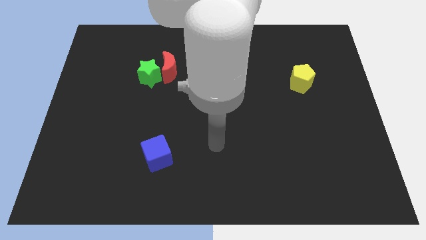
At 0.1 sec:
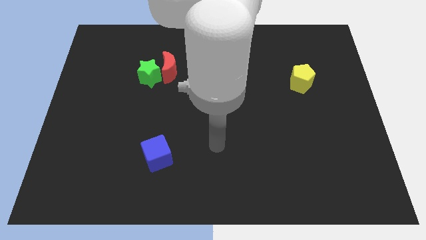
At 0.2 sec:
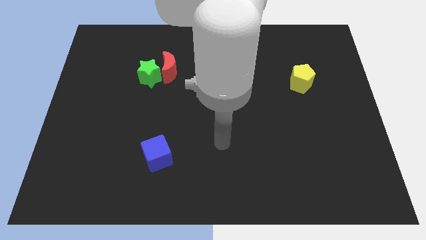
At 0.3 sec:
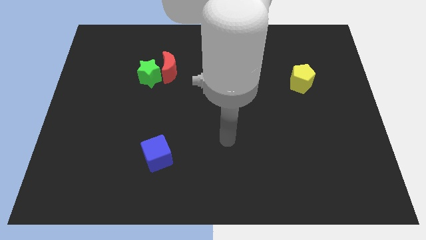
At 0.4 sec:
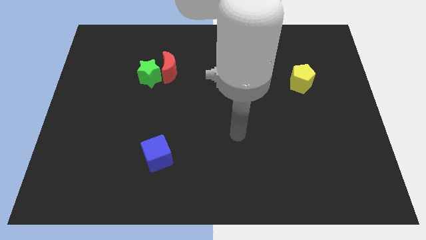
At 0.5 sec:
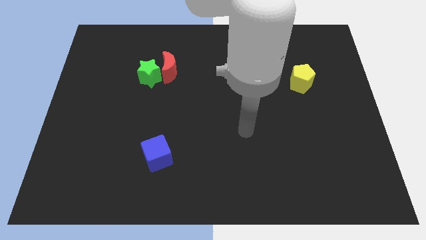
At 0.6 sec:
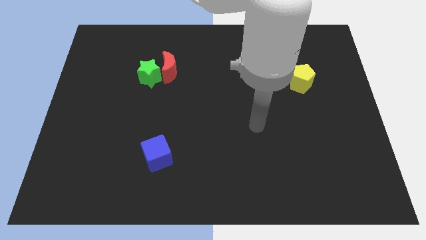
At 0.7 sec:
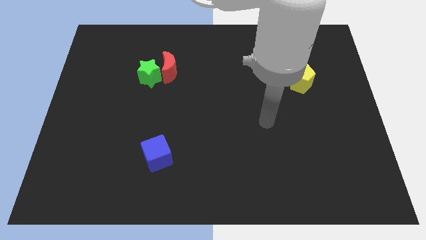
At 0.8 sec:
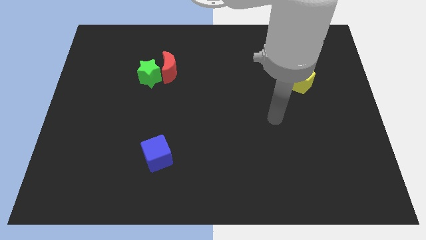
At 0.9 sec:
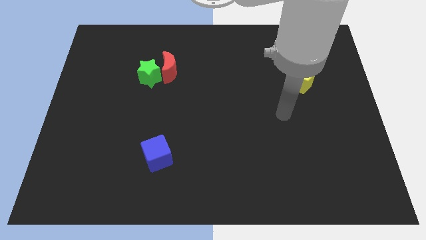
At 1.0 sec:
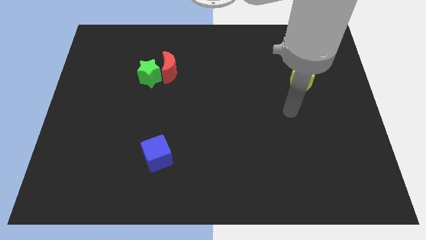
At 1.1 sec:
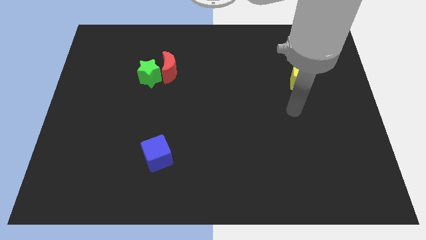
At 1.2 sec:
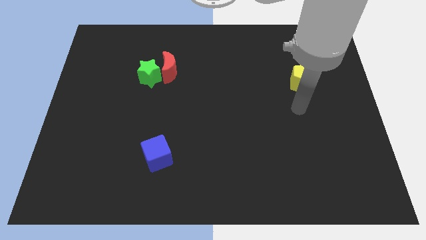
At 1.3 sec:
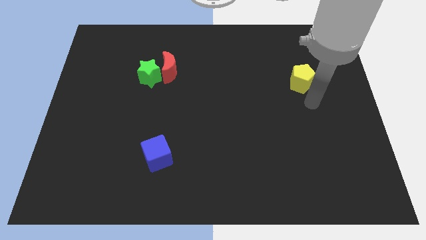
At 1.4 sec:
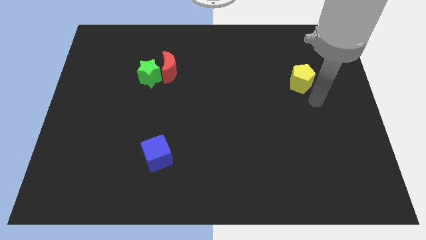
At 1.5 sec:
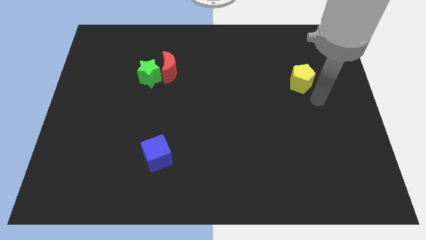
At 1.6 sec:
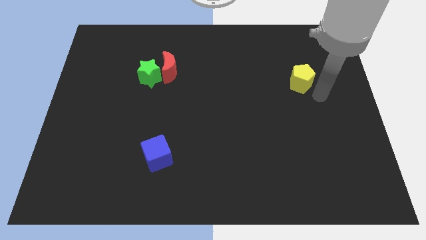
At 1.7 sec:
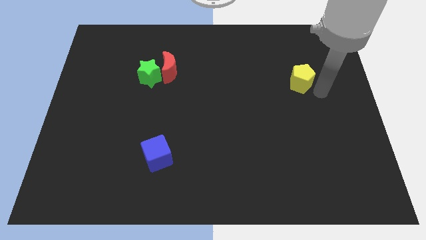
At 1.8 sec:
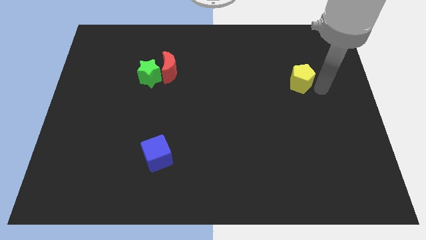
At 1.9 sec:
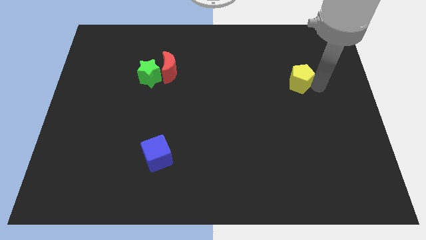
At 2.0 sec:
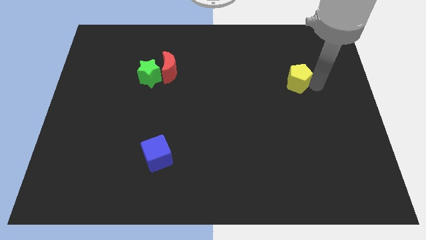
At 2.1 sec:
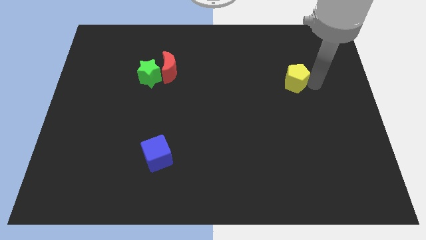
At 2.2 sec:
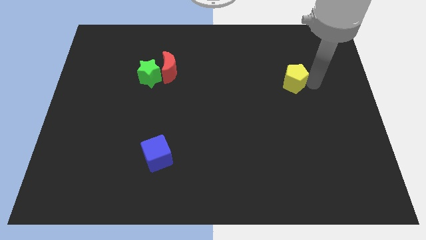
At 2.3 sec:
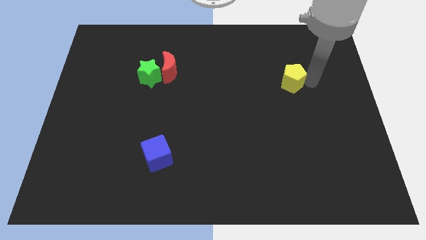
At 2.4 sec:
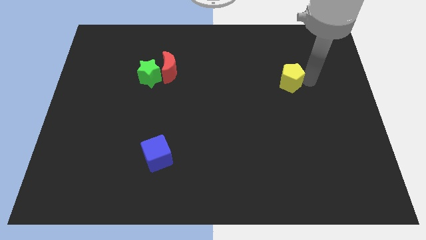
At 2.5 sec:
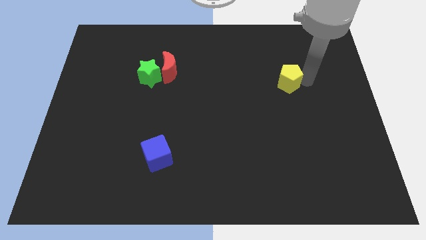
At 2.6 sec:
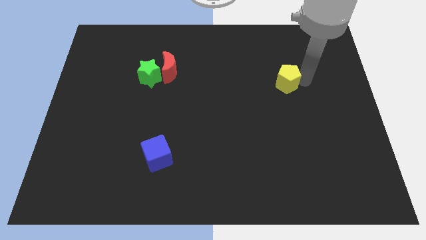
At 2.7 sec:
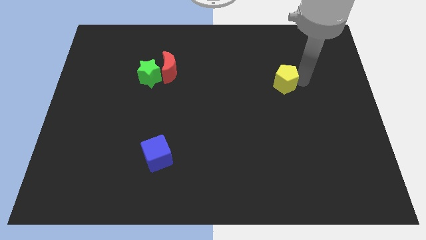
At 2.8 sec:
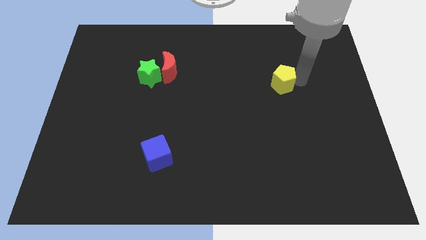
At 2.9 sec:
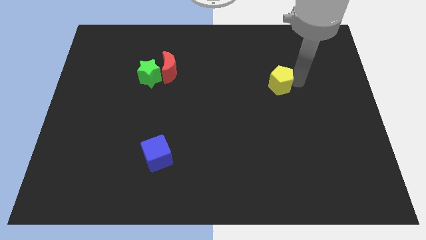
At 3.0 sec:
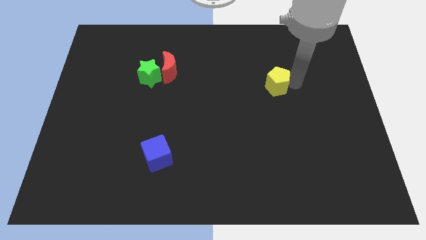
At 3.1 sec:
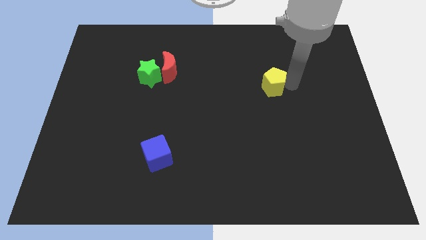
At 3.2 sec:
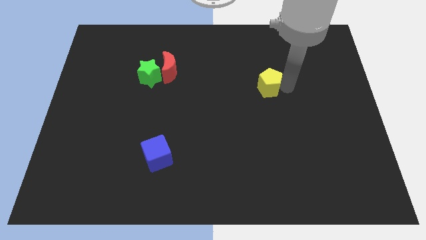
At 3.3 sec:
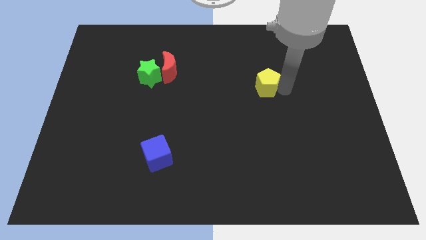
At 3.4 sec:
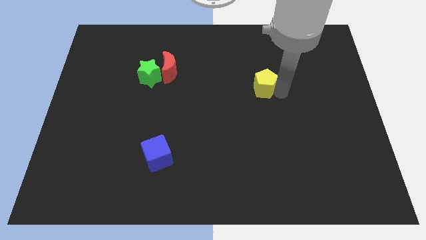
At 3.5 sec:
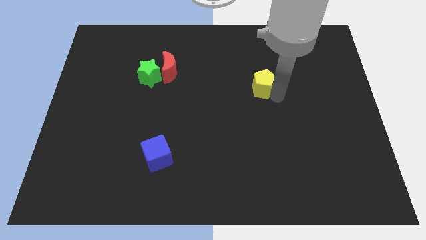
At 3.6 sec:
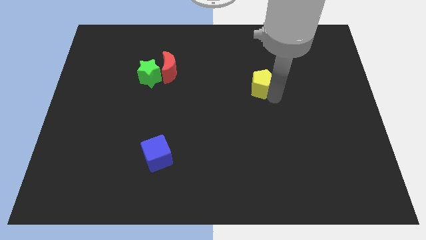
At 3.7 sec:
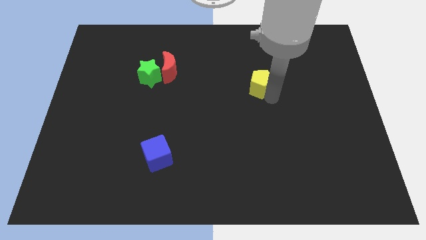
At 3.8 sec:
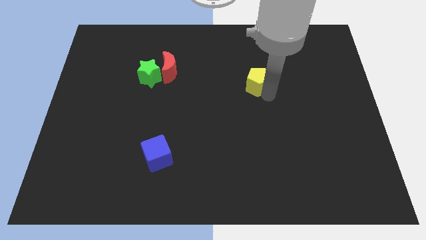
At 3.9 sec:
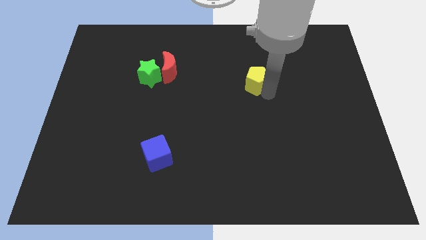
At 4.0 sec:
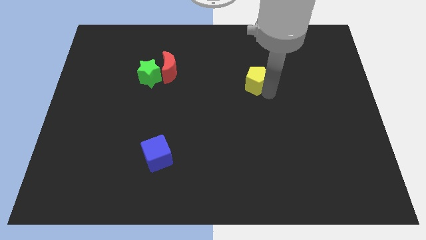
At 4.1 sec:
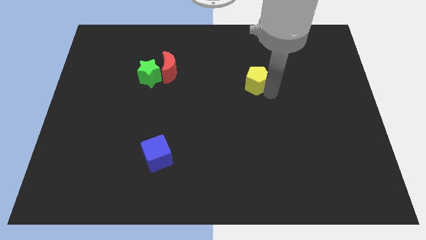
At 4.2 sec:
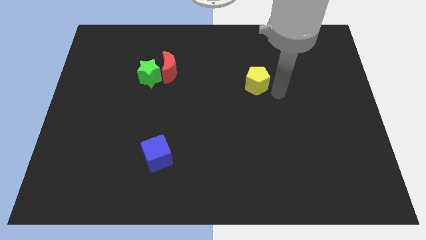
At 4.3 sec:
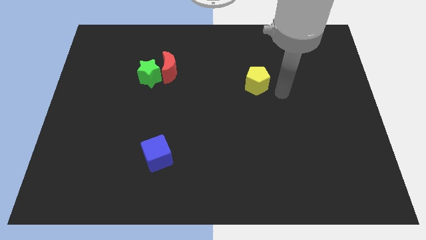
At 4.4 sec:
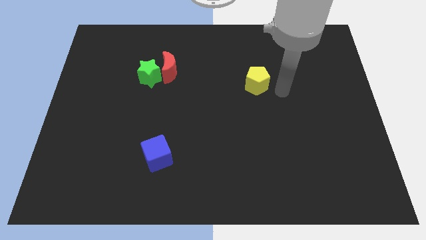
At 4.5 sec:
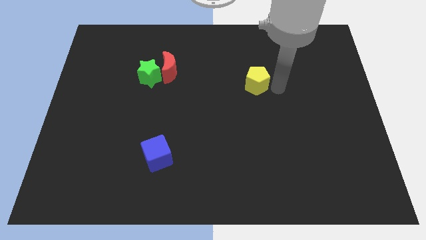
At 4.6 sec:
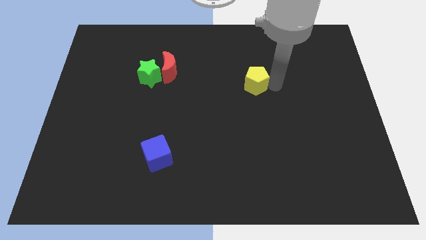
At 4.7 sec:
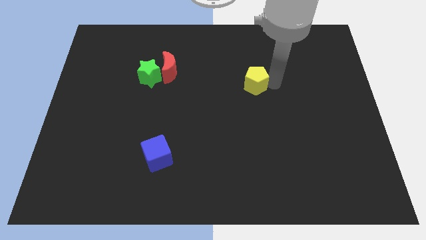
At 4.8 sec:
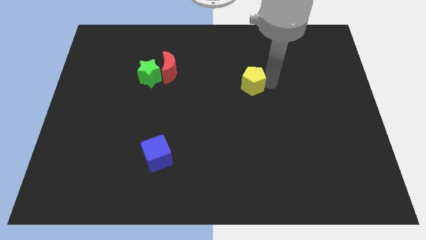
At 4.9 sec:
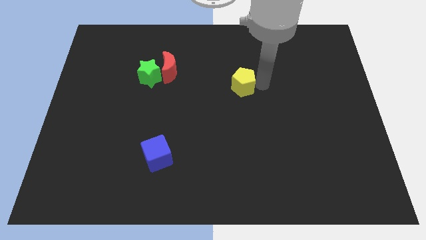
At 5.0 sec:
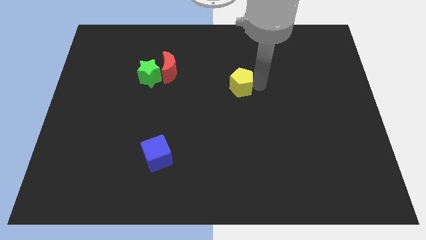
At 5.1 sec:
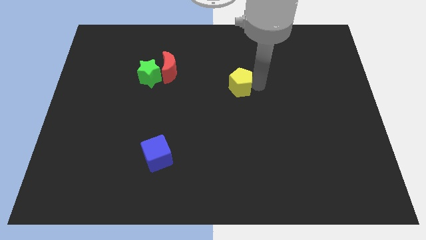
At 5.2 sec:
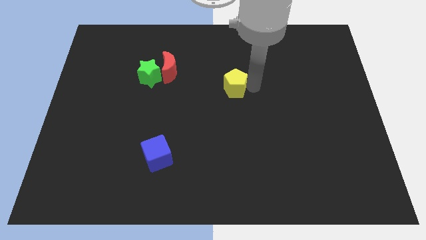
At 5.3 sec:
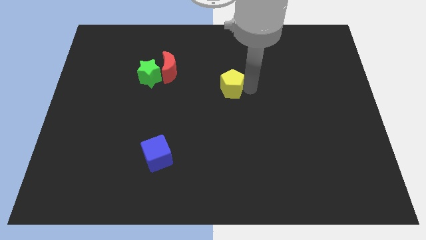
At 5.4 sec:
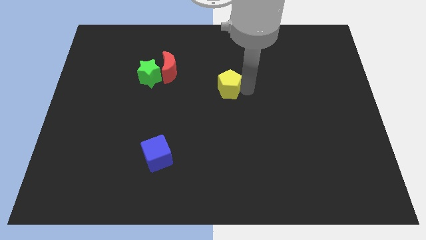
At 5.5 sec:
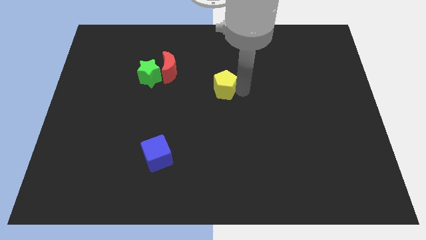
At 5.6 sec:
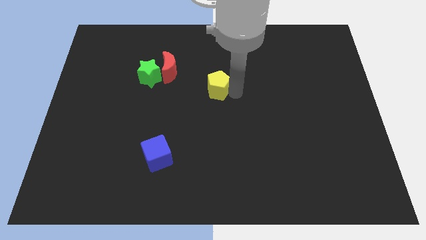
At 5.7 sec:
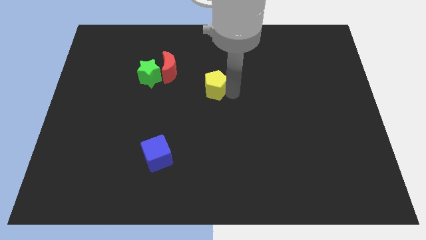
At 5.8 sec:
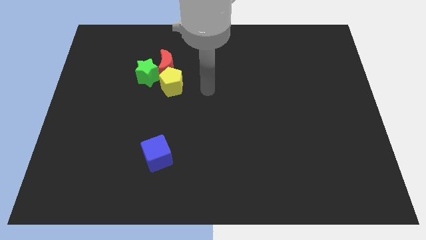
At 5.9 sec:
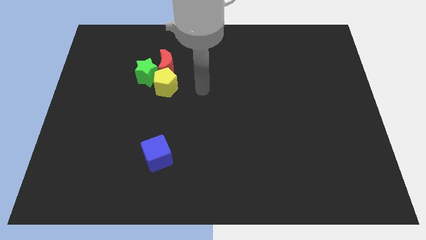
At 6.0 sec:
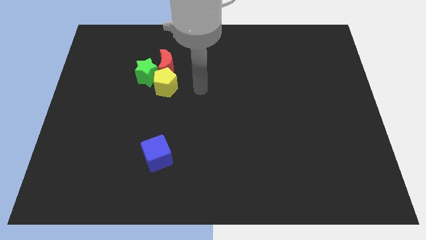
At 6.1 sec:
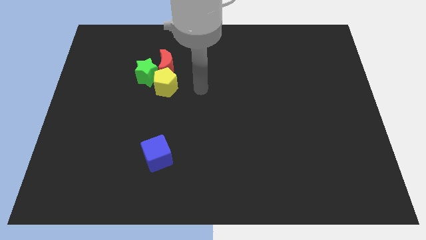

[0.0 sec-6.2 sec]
put the pentagon close to the star

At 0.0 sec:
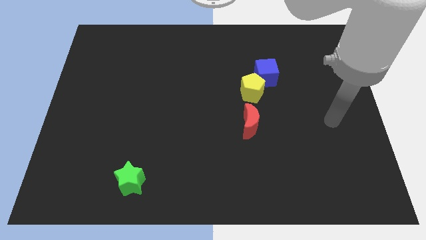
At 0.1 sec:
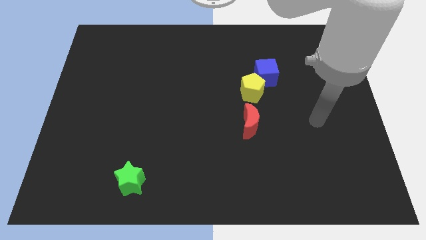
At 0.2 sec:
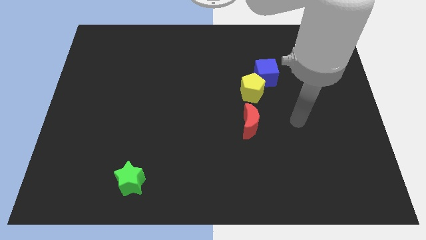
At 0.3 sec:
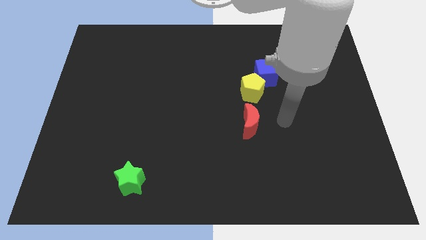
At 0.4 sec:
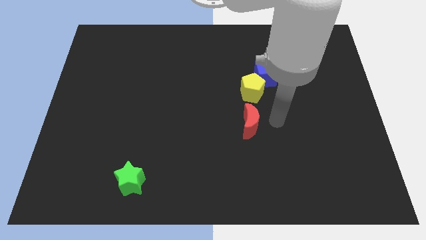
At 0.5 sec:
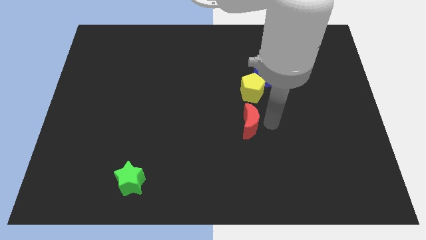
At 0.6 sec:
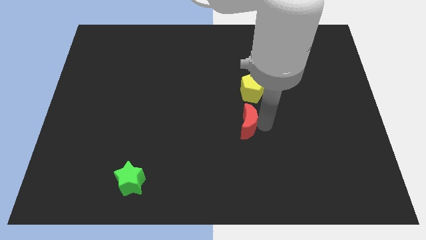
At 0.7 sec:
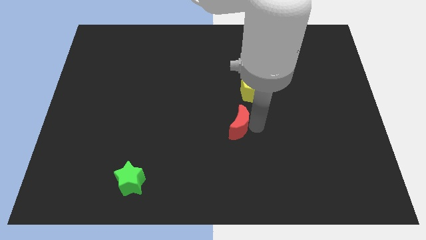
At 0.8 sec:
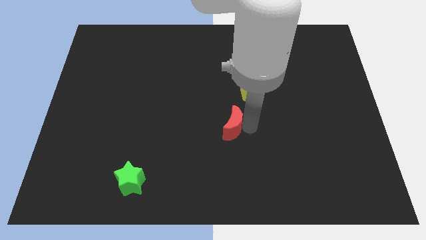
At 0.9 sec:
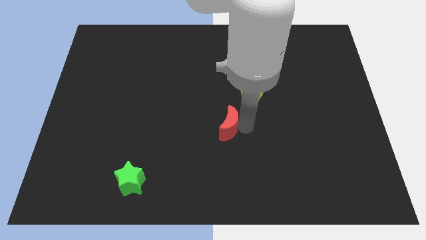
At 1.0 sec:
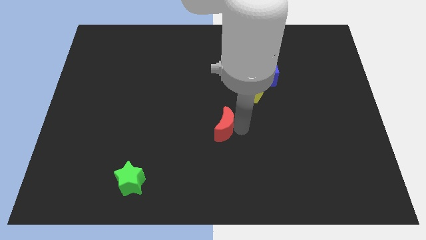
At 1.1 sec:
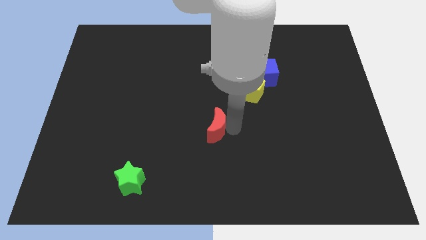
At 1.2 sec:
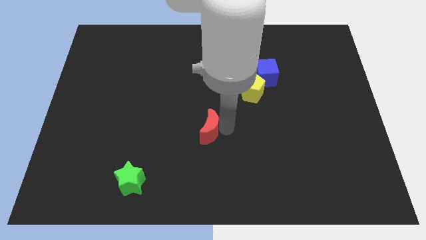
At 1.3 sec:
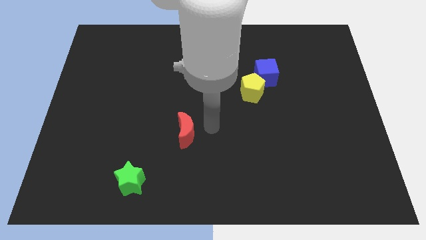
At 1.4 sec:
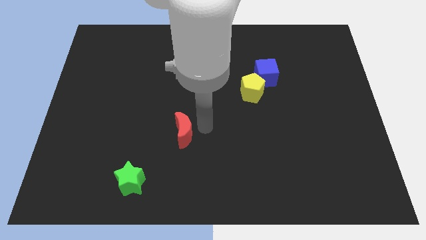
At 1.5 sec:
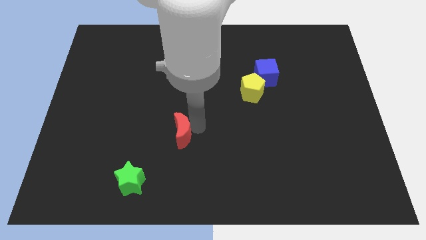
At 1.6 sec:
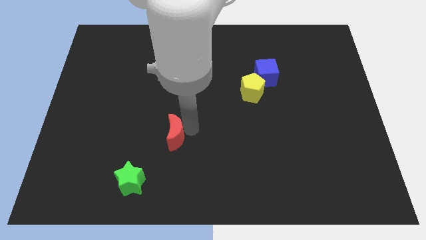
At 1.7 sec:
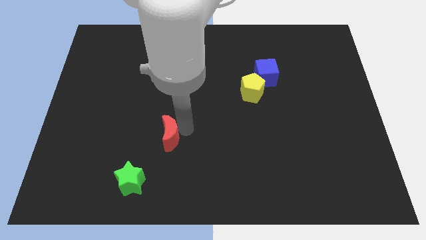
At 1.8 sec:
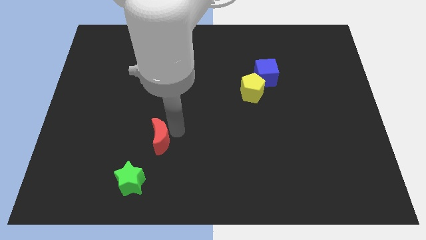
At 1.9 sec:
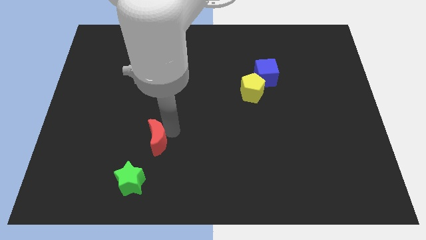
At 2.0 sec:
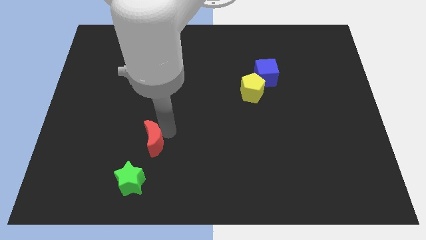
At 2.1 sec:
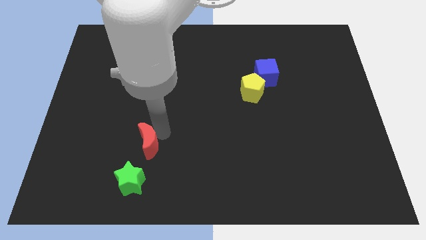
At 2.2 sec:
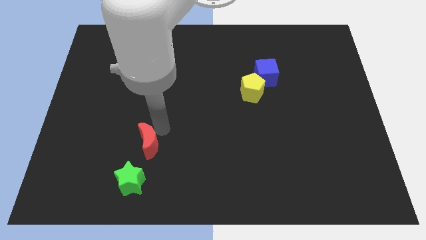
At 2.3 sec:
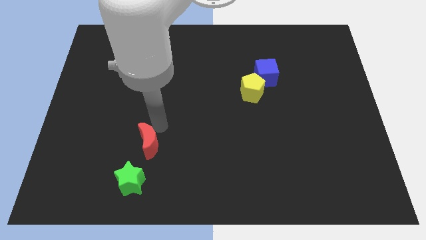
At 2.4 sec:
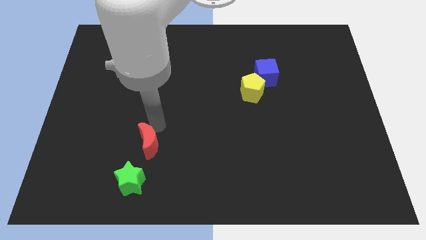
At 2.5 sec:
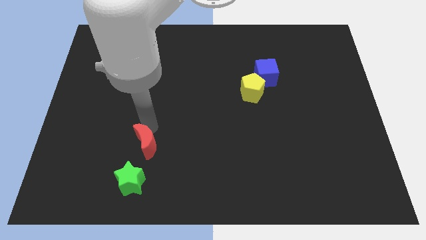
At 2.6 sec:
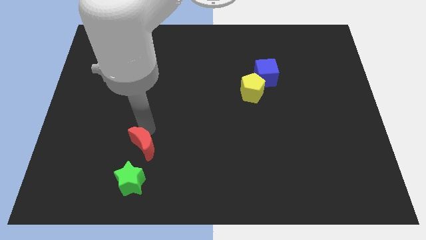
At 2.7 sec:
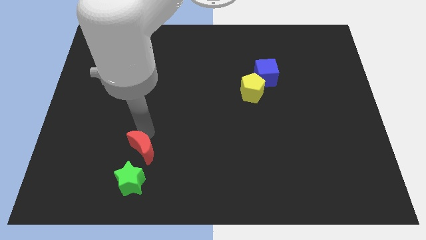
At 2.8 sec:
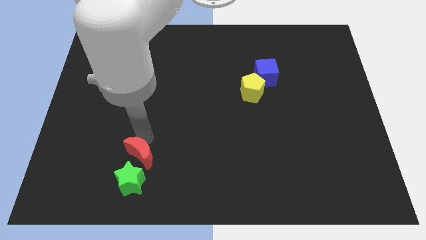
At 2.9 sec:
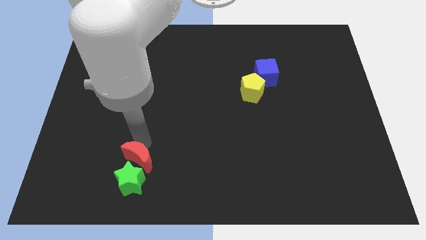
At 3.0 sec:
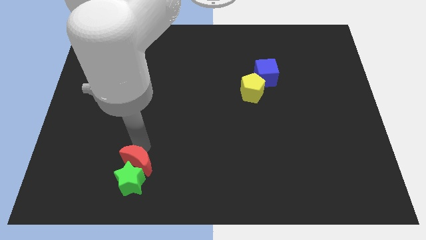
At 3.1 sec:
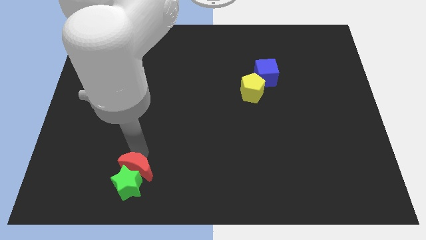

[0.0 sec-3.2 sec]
move the red block towards the green star
